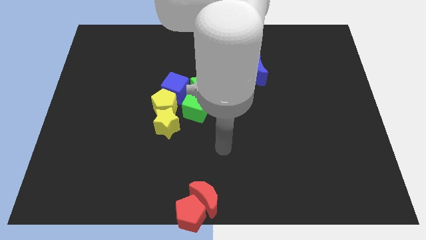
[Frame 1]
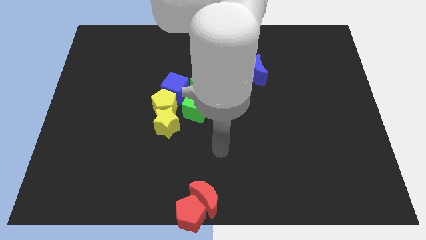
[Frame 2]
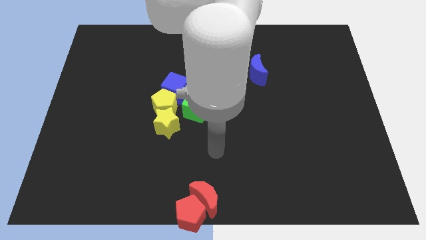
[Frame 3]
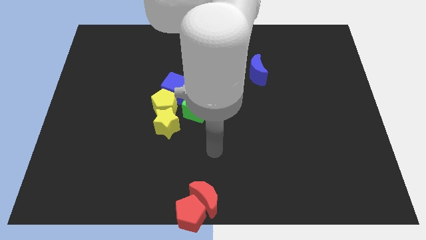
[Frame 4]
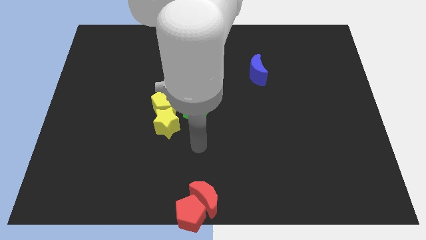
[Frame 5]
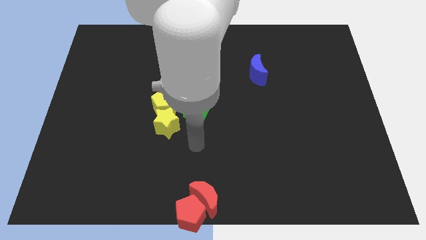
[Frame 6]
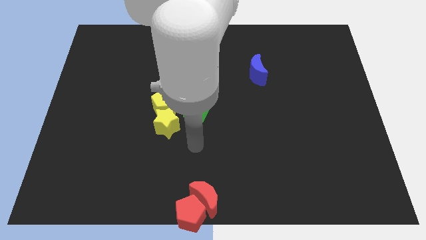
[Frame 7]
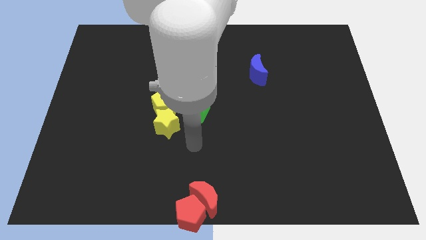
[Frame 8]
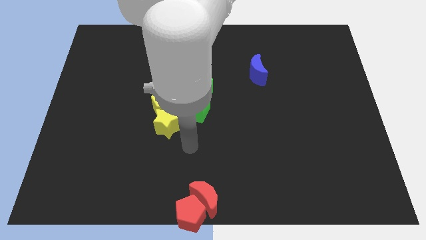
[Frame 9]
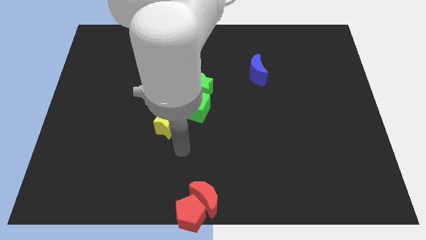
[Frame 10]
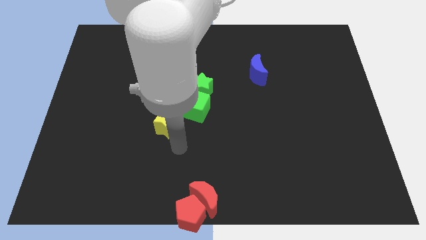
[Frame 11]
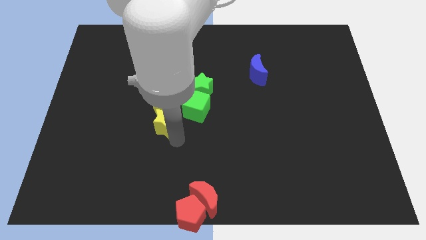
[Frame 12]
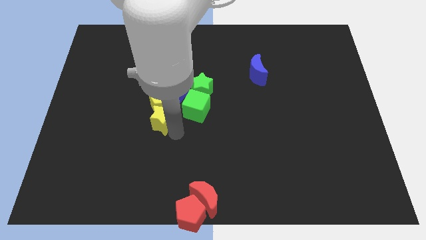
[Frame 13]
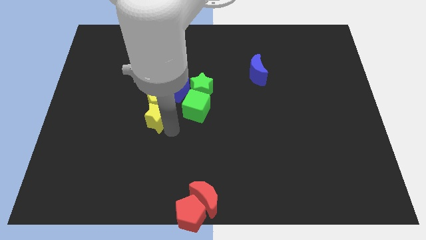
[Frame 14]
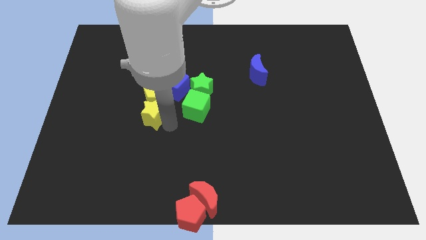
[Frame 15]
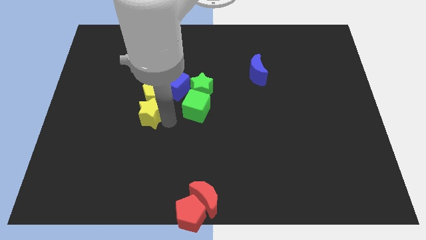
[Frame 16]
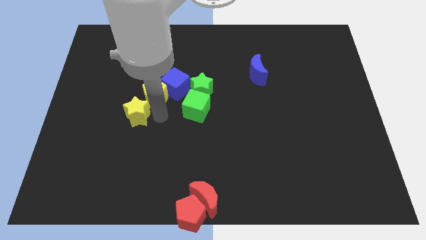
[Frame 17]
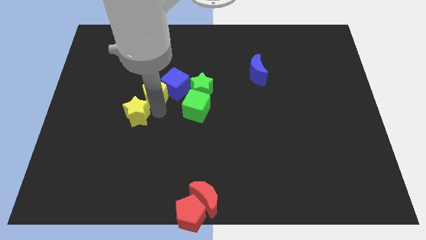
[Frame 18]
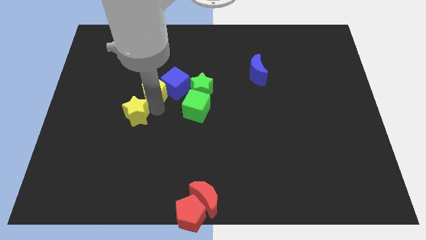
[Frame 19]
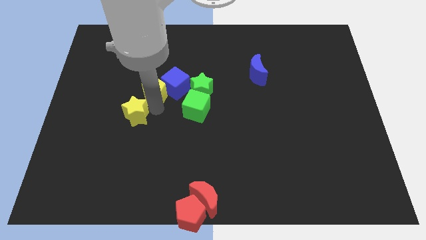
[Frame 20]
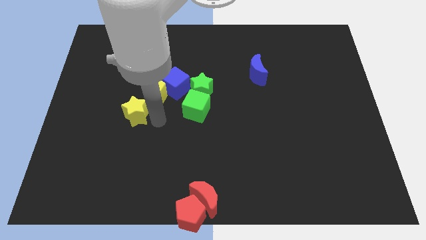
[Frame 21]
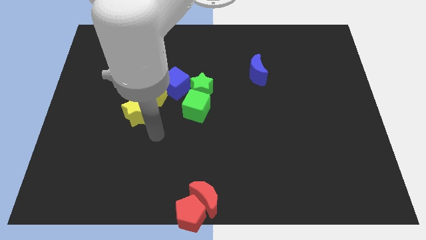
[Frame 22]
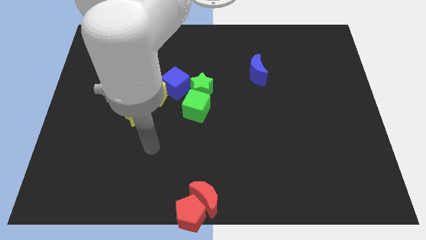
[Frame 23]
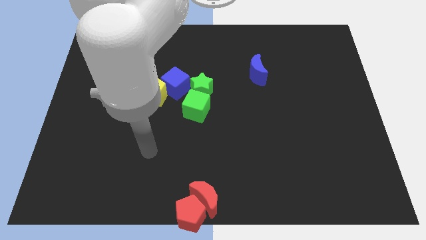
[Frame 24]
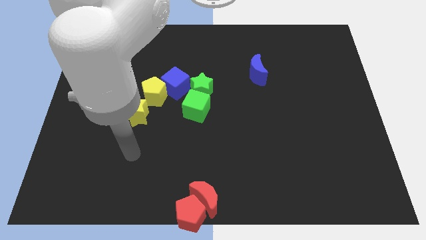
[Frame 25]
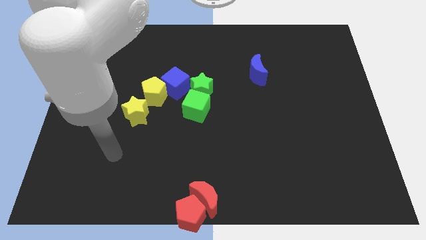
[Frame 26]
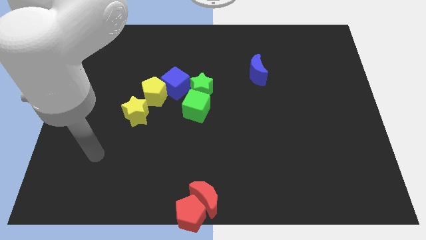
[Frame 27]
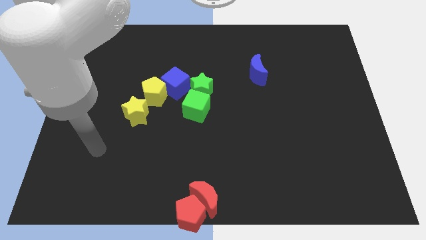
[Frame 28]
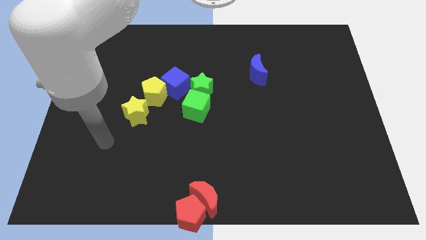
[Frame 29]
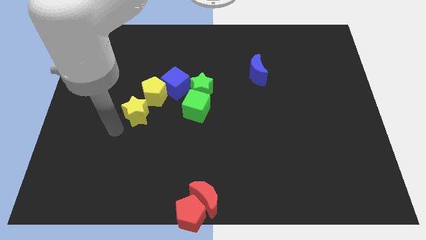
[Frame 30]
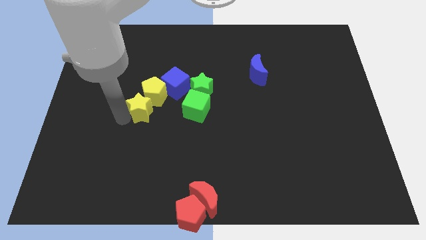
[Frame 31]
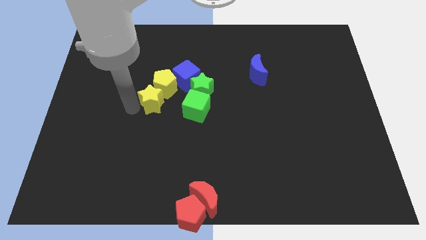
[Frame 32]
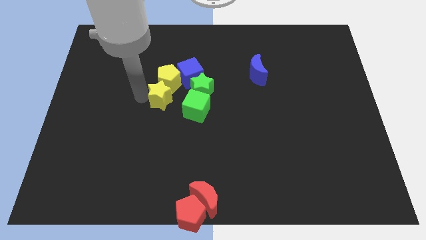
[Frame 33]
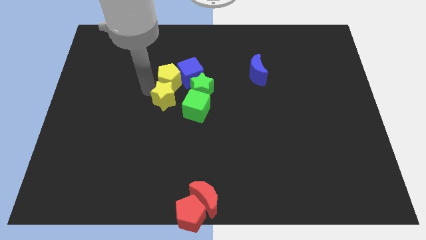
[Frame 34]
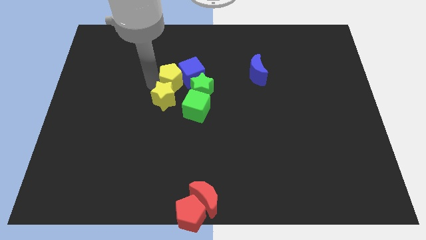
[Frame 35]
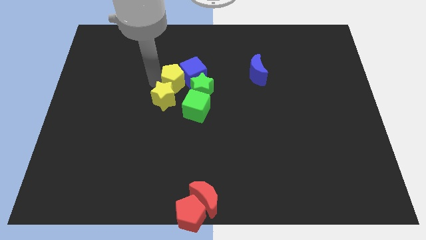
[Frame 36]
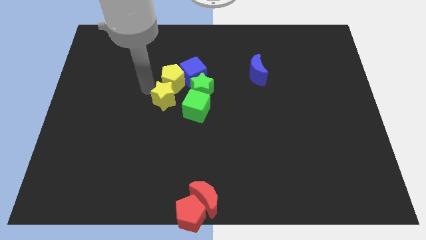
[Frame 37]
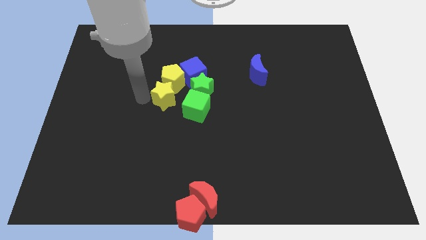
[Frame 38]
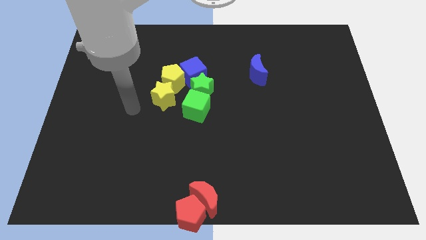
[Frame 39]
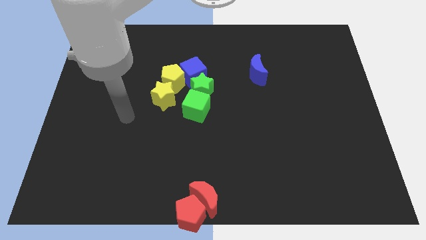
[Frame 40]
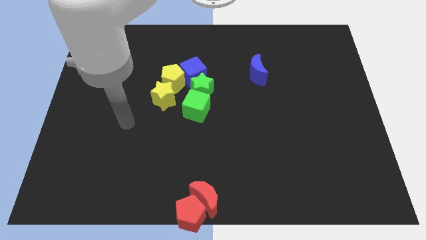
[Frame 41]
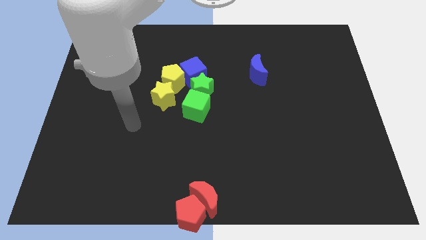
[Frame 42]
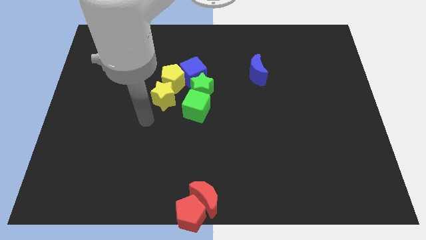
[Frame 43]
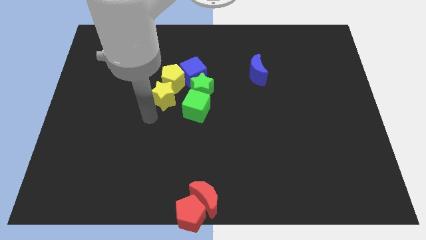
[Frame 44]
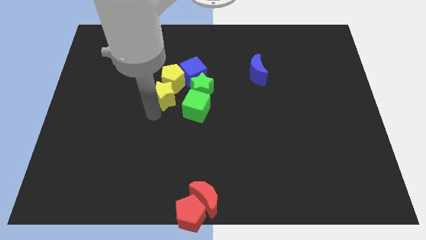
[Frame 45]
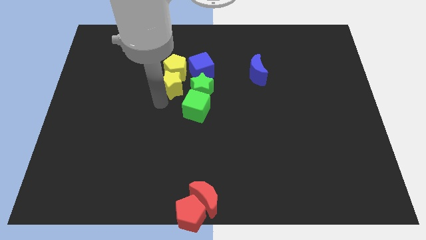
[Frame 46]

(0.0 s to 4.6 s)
move the yellow star to the left side of the green star

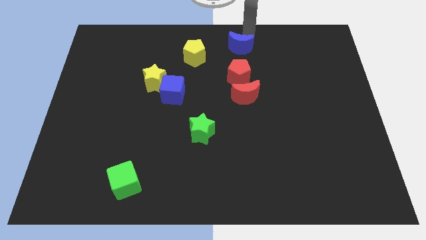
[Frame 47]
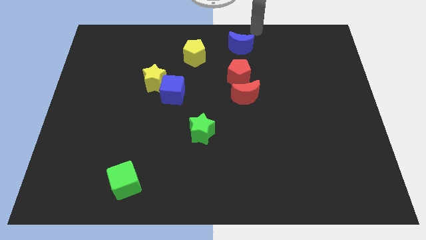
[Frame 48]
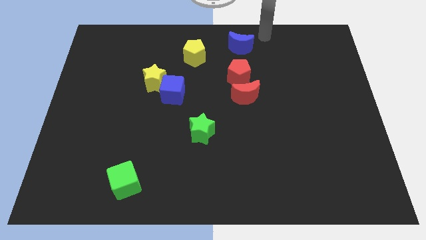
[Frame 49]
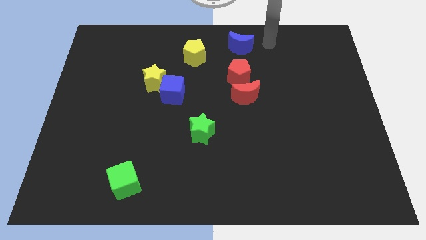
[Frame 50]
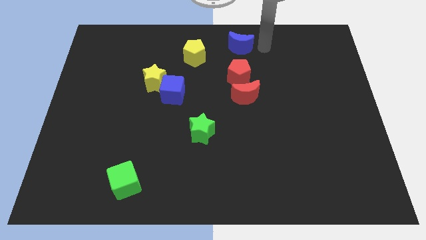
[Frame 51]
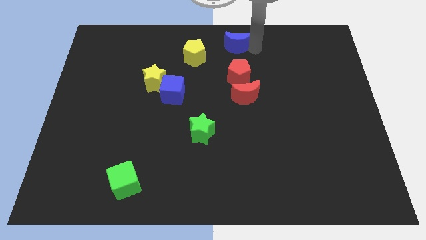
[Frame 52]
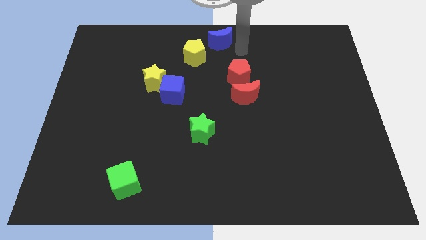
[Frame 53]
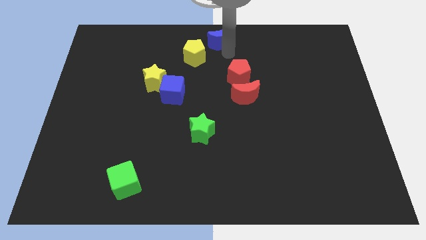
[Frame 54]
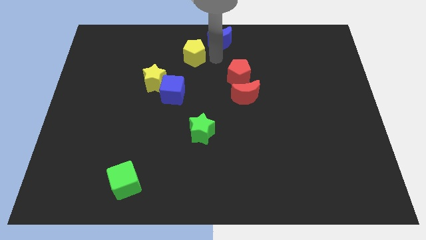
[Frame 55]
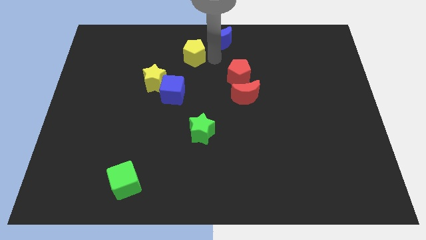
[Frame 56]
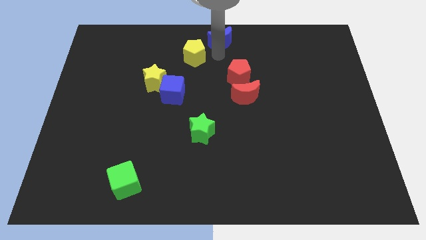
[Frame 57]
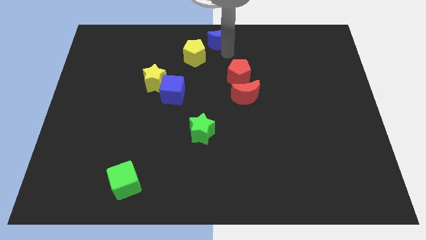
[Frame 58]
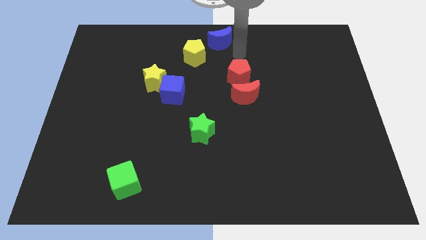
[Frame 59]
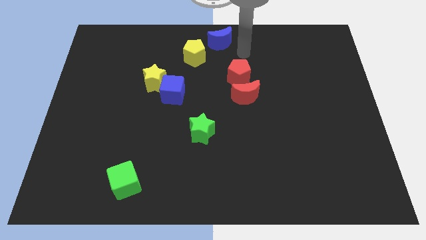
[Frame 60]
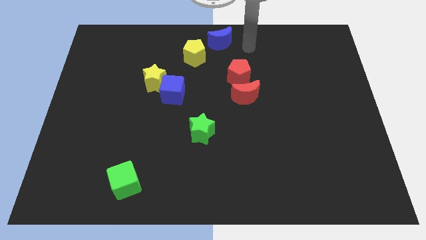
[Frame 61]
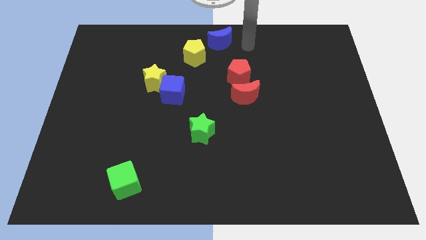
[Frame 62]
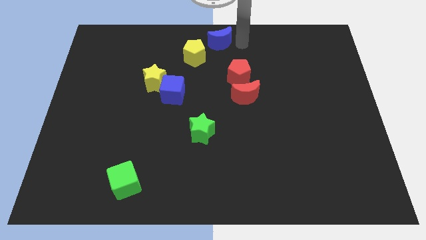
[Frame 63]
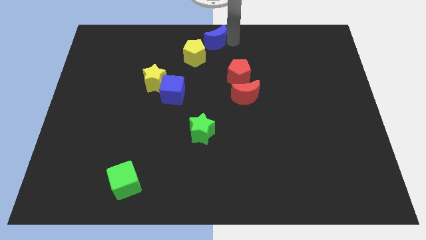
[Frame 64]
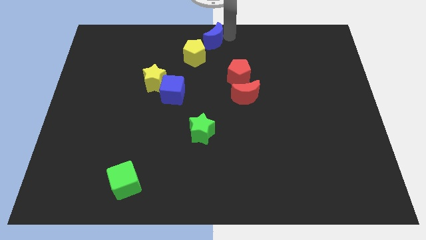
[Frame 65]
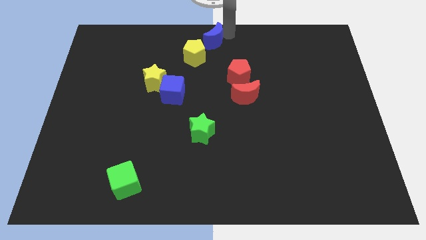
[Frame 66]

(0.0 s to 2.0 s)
touch the yellow pentogon with bottom of the bule moon

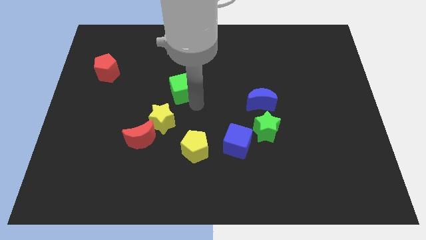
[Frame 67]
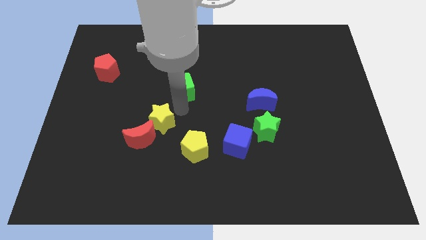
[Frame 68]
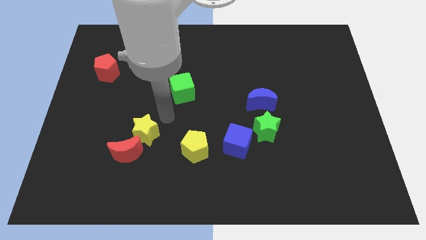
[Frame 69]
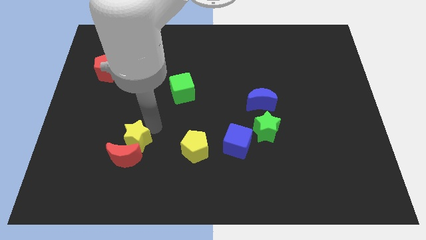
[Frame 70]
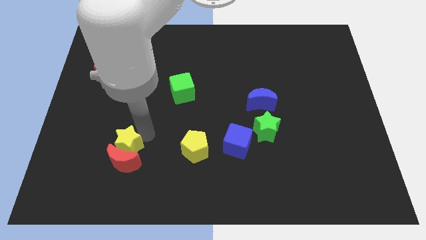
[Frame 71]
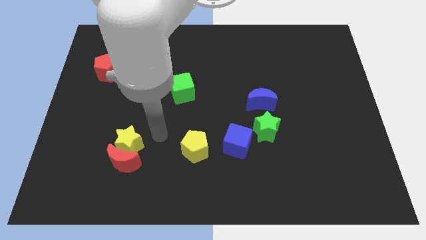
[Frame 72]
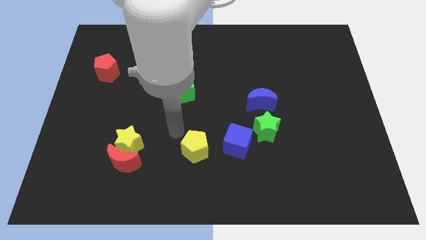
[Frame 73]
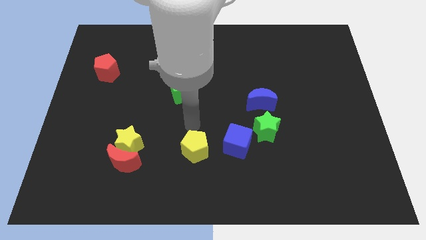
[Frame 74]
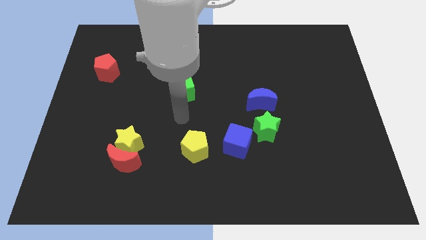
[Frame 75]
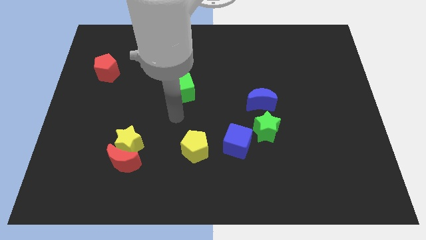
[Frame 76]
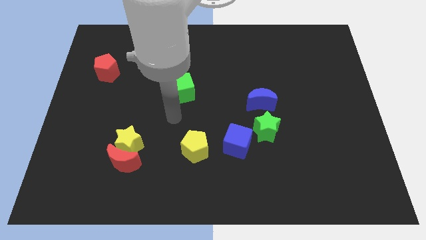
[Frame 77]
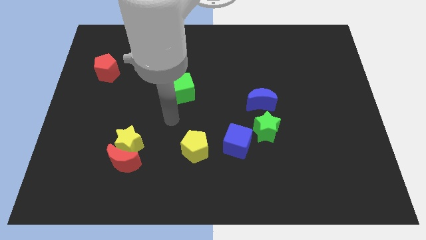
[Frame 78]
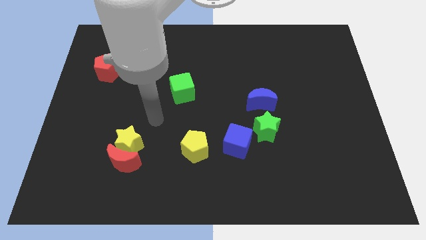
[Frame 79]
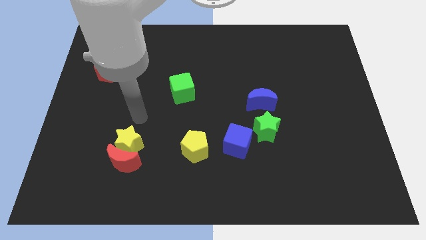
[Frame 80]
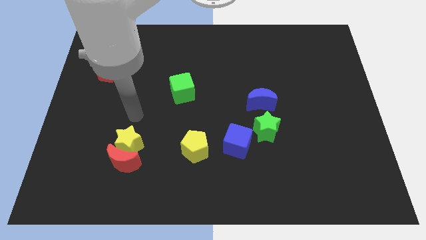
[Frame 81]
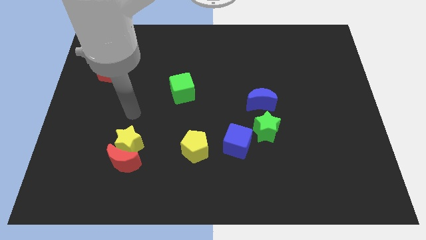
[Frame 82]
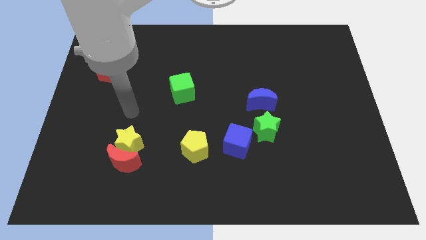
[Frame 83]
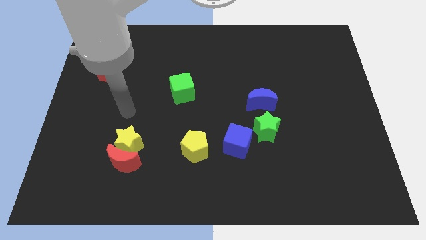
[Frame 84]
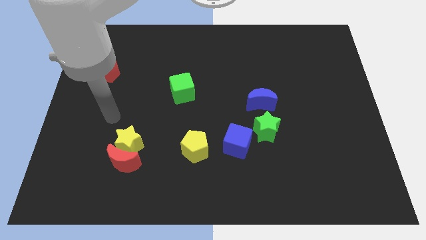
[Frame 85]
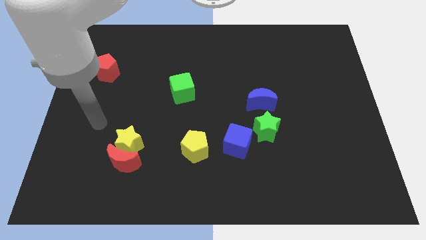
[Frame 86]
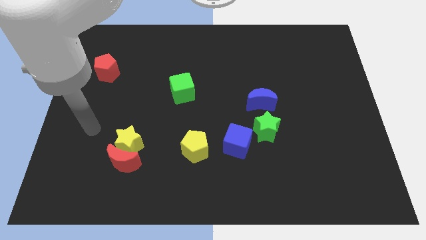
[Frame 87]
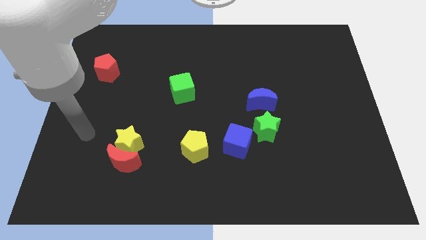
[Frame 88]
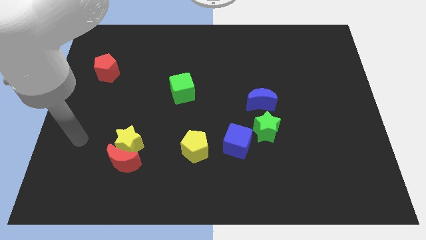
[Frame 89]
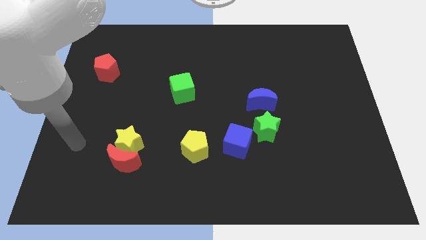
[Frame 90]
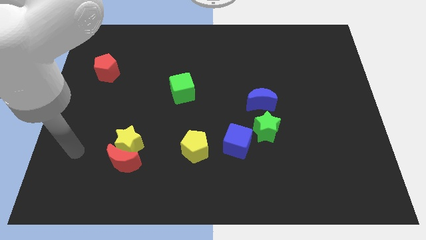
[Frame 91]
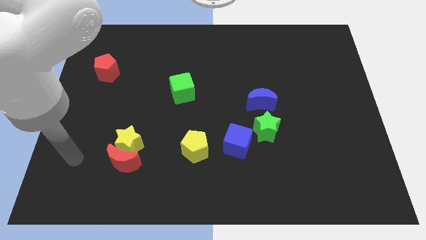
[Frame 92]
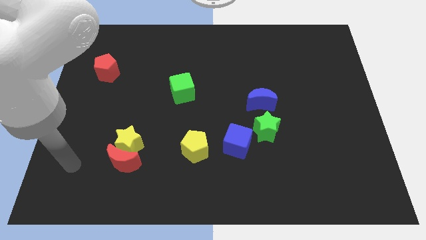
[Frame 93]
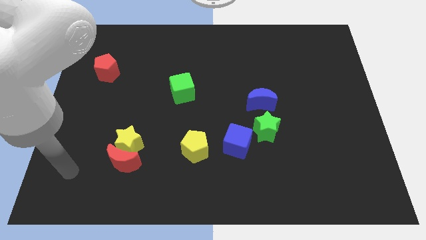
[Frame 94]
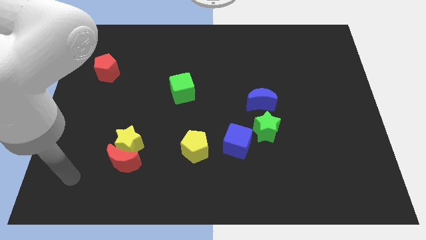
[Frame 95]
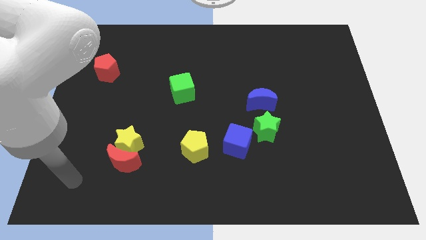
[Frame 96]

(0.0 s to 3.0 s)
push yellow star in to red crescent
